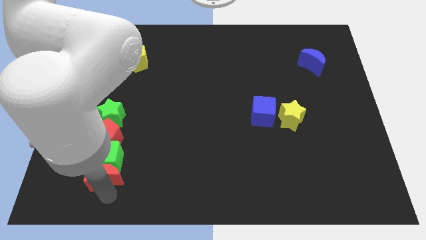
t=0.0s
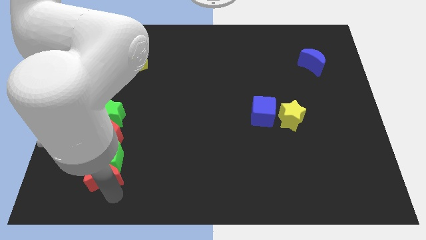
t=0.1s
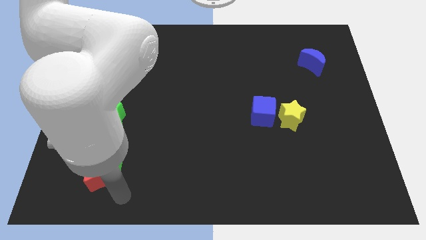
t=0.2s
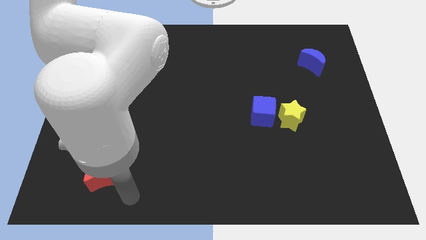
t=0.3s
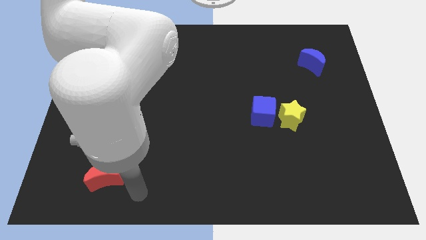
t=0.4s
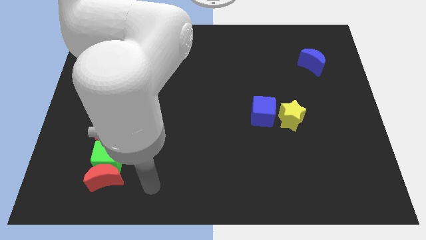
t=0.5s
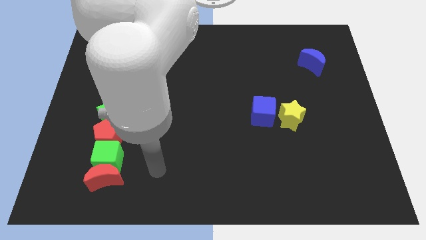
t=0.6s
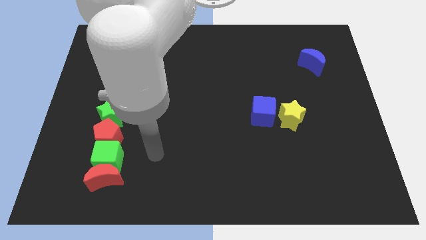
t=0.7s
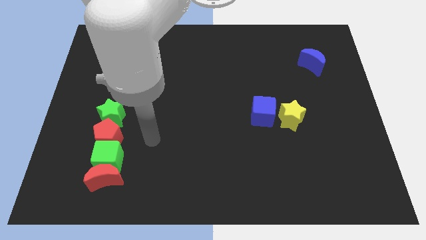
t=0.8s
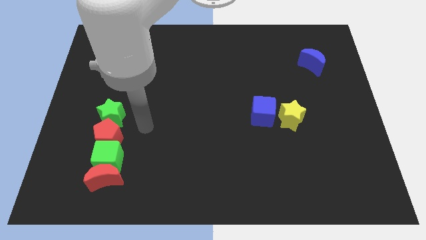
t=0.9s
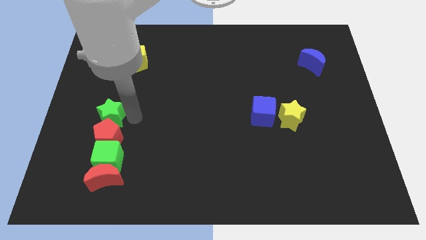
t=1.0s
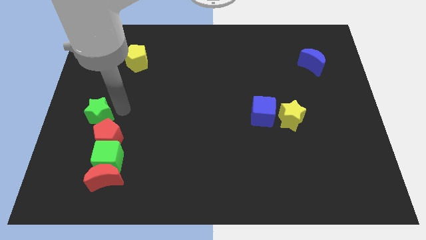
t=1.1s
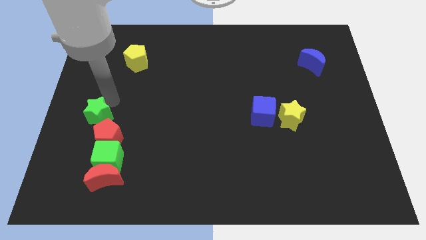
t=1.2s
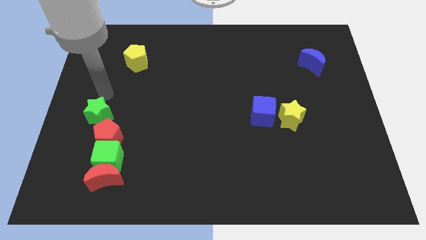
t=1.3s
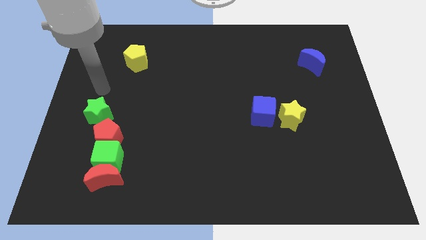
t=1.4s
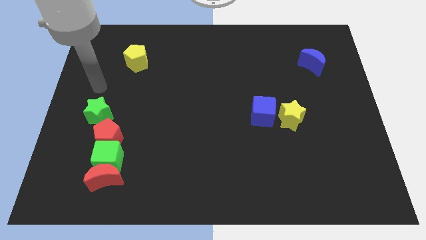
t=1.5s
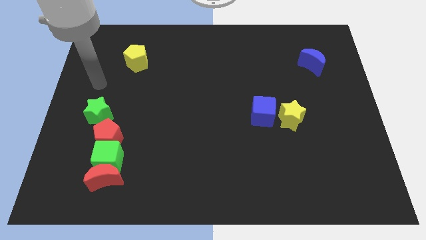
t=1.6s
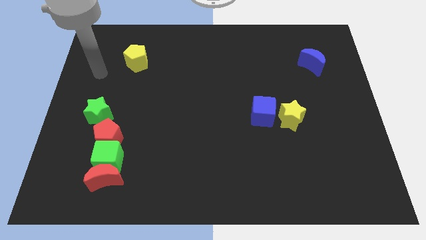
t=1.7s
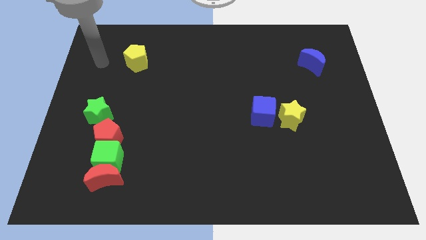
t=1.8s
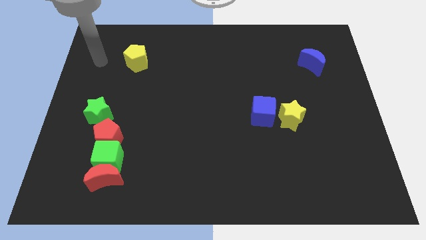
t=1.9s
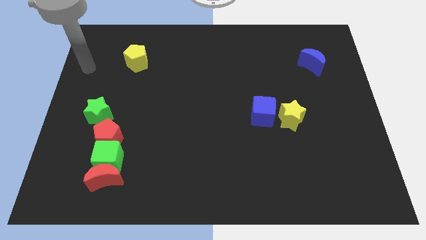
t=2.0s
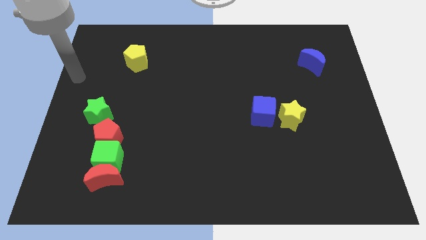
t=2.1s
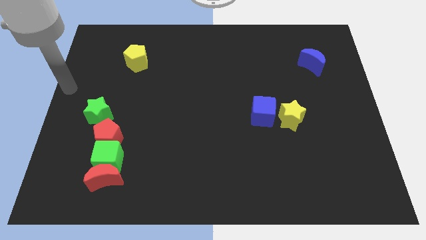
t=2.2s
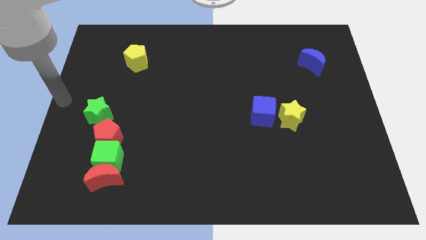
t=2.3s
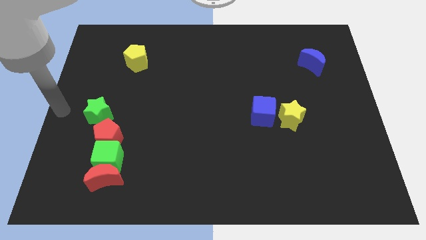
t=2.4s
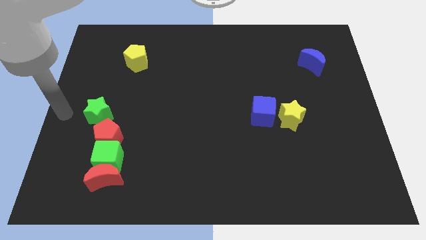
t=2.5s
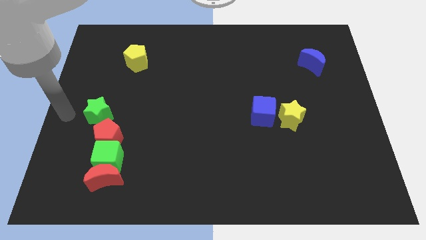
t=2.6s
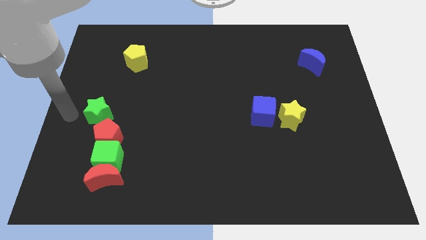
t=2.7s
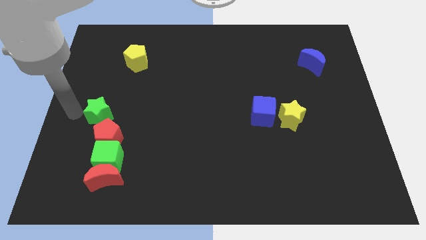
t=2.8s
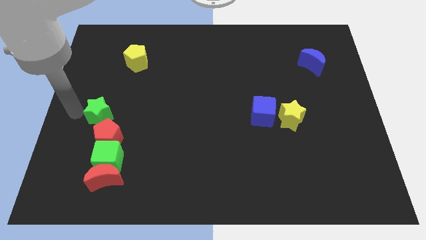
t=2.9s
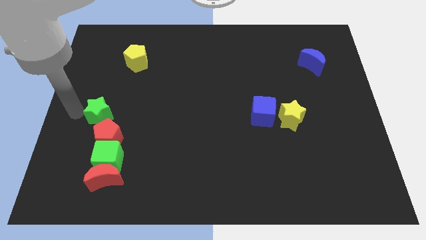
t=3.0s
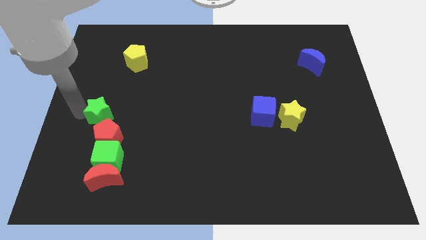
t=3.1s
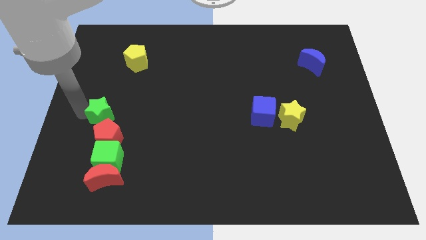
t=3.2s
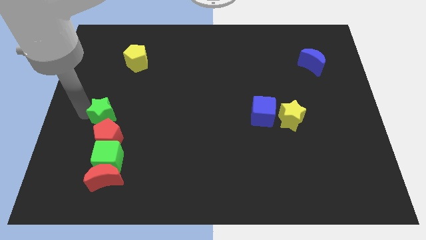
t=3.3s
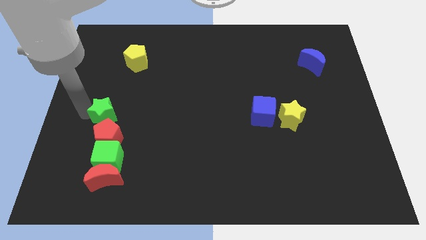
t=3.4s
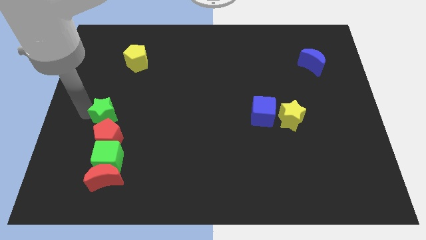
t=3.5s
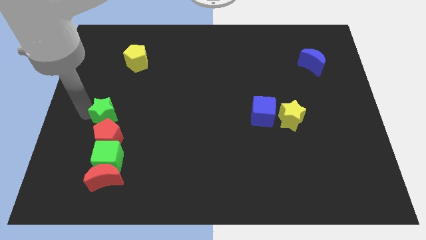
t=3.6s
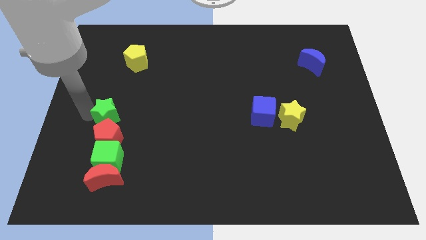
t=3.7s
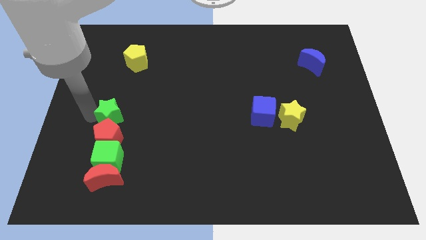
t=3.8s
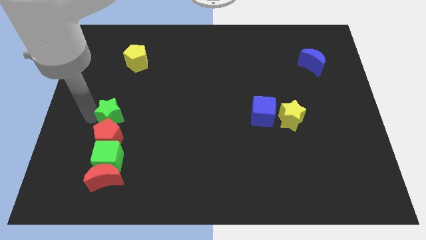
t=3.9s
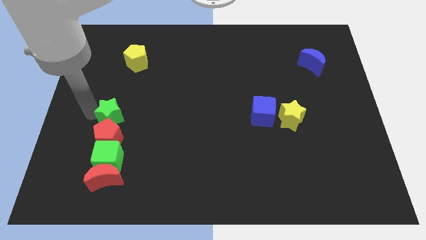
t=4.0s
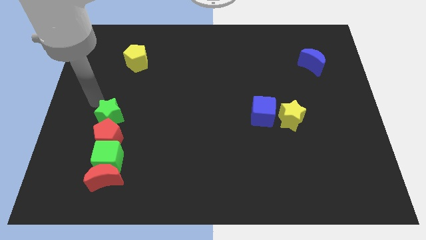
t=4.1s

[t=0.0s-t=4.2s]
adjust the green star at the top side of the red pentagon

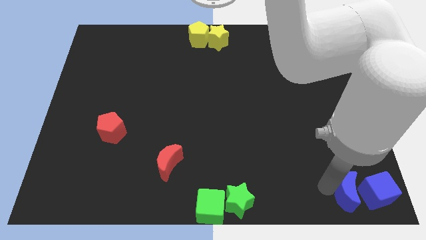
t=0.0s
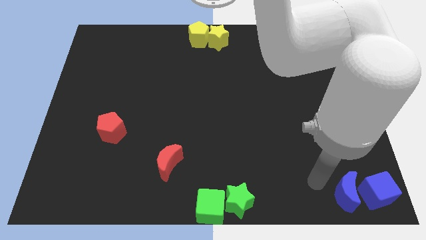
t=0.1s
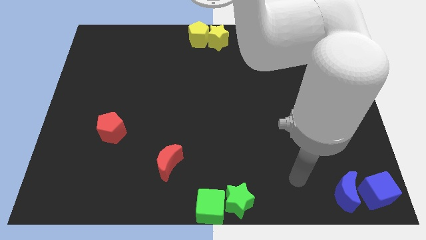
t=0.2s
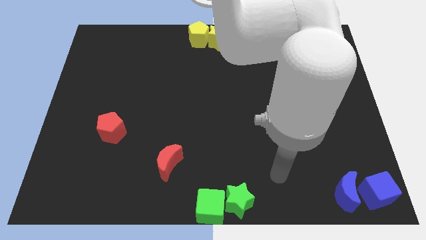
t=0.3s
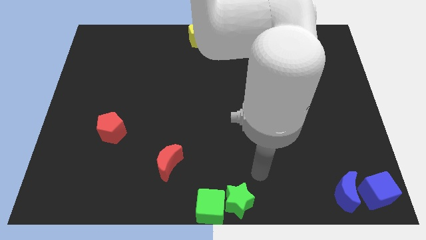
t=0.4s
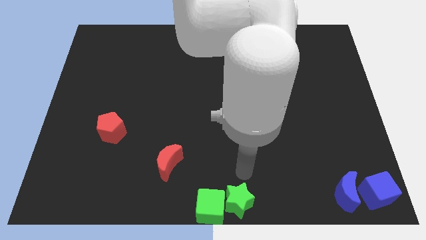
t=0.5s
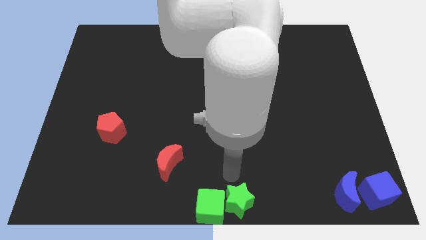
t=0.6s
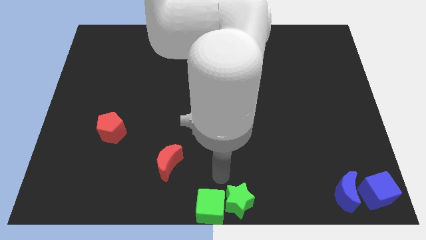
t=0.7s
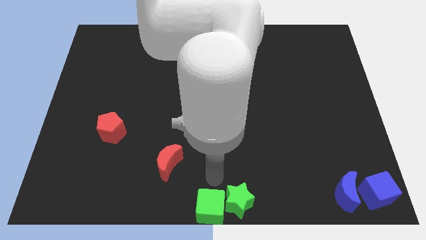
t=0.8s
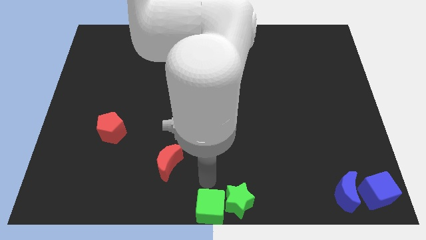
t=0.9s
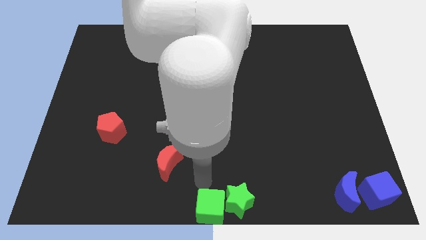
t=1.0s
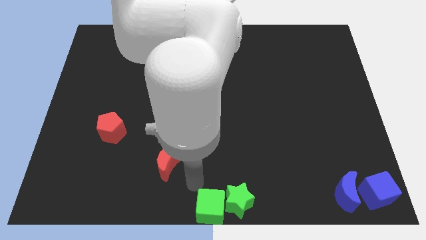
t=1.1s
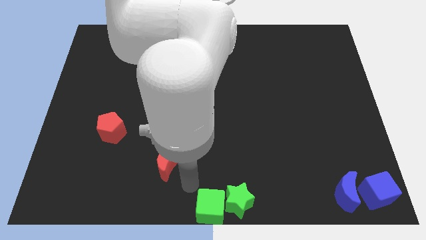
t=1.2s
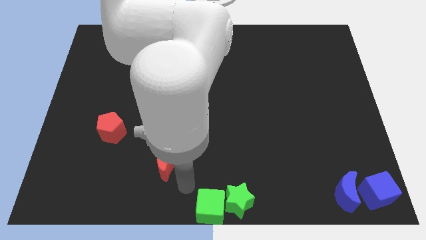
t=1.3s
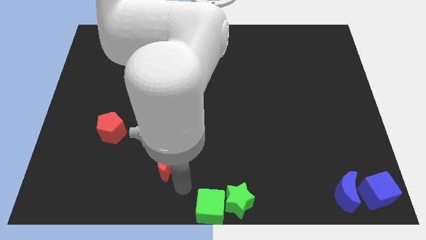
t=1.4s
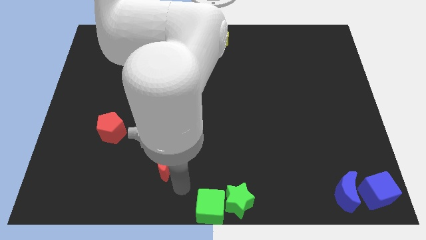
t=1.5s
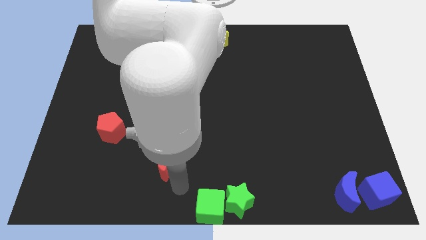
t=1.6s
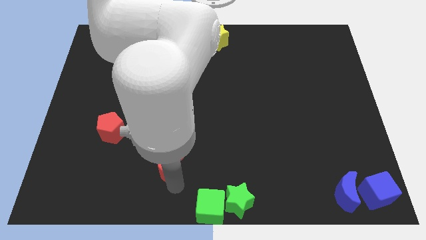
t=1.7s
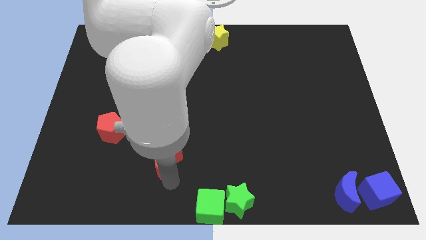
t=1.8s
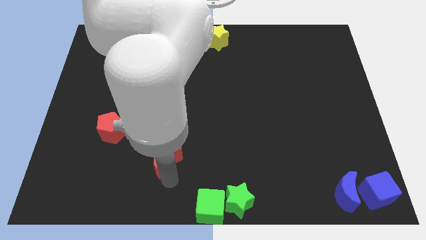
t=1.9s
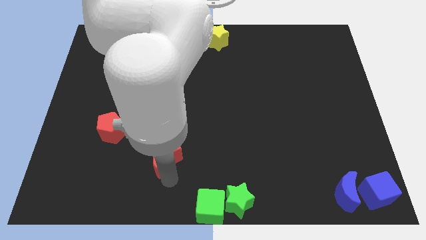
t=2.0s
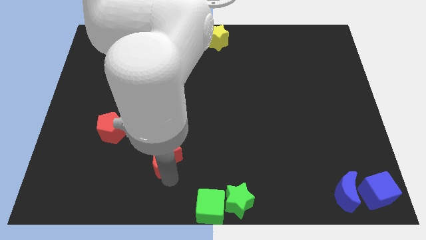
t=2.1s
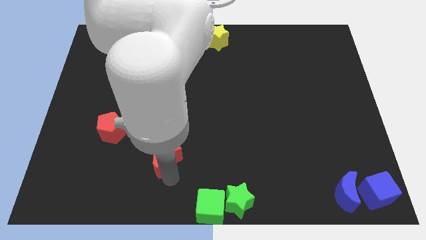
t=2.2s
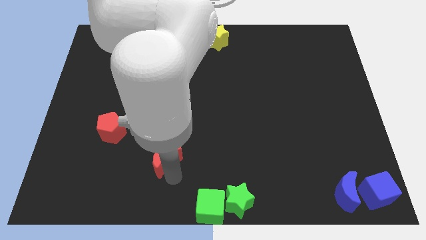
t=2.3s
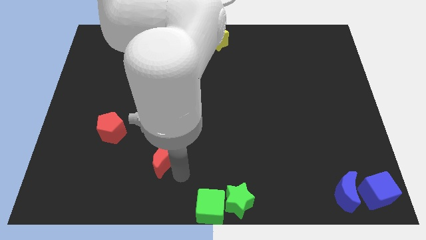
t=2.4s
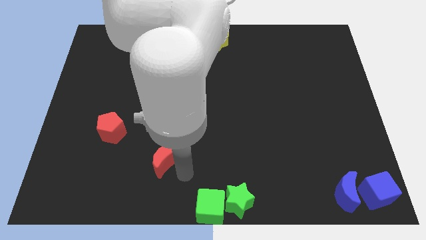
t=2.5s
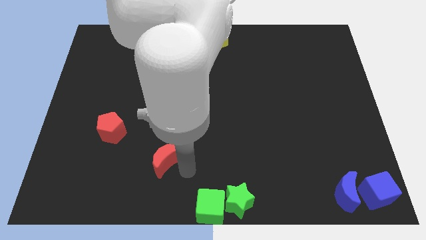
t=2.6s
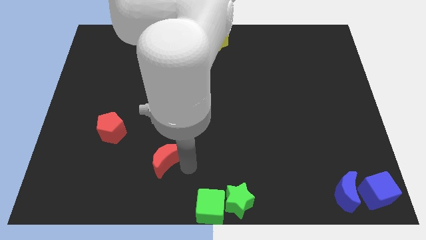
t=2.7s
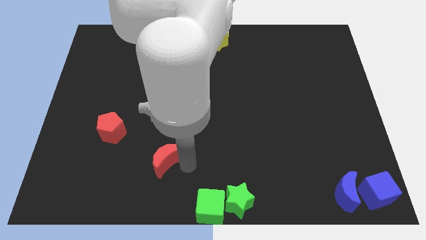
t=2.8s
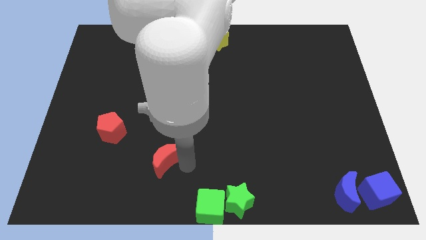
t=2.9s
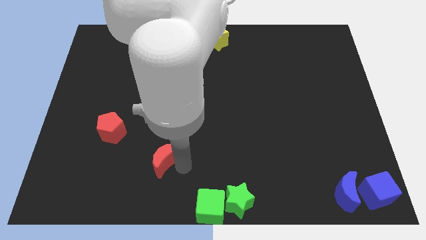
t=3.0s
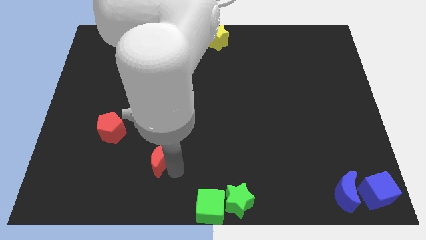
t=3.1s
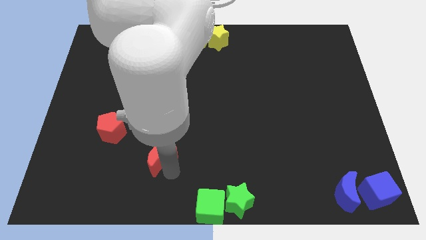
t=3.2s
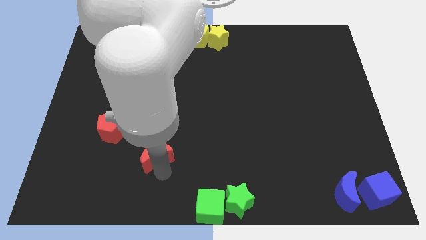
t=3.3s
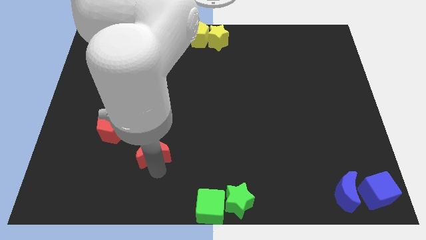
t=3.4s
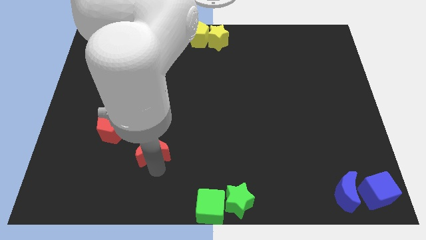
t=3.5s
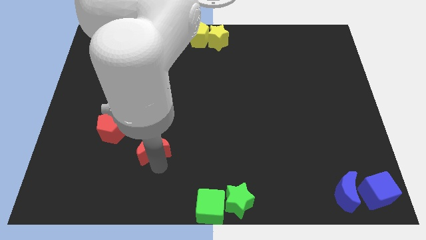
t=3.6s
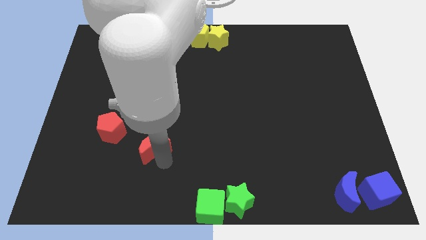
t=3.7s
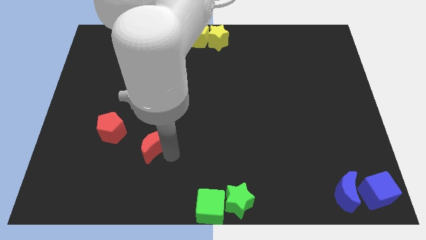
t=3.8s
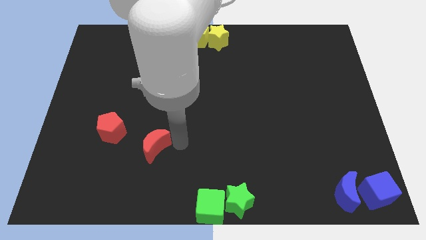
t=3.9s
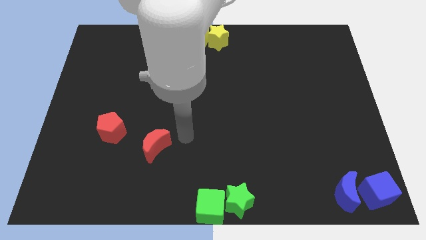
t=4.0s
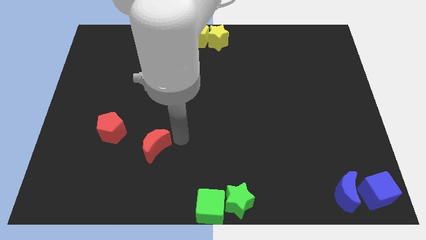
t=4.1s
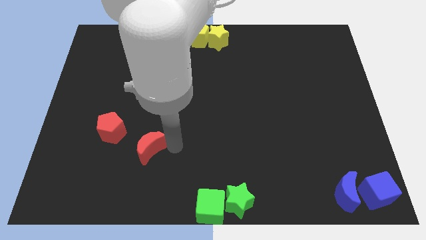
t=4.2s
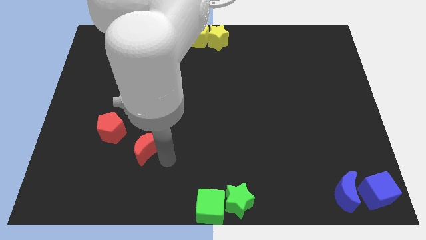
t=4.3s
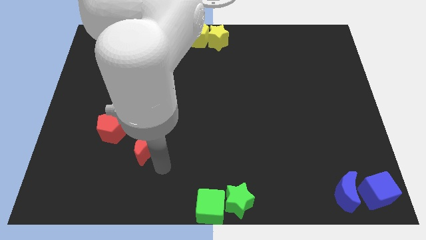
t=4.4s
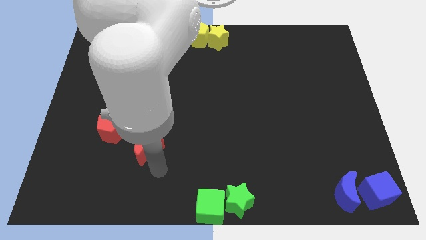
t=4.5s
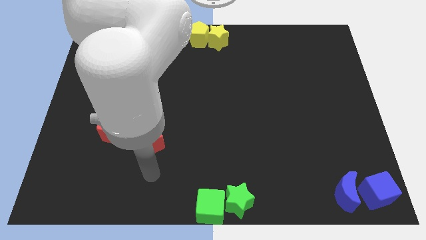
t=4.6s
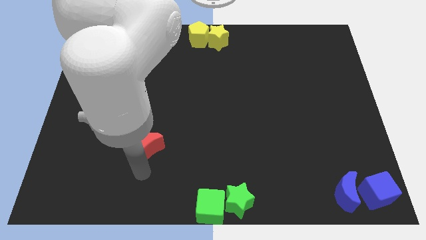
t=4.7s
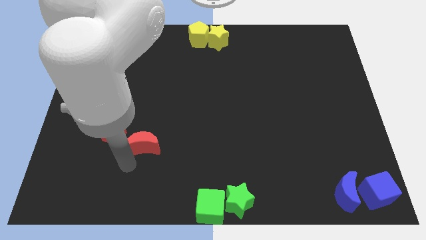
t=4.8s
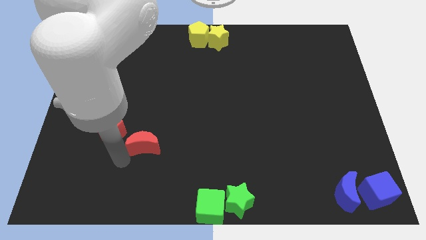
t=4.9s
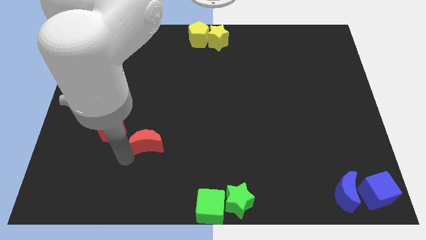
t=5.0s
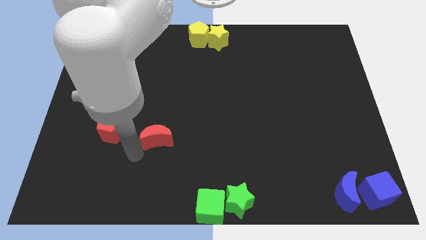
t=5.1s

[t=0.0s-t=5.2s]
place the red moon right to the red pentagon
